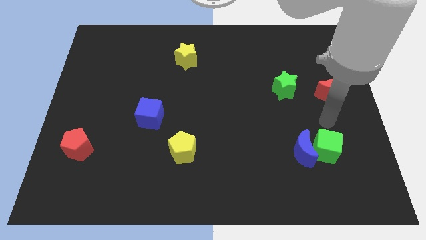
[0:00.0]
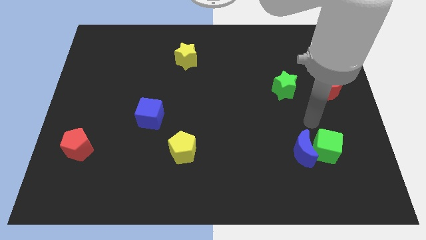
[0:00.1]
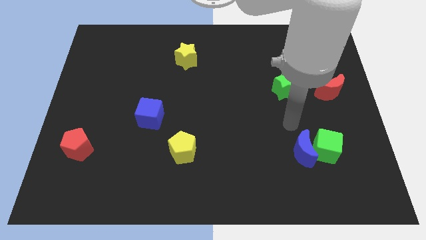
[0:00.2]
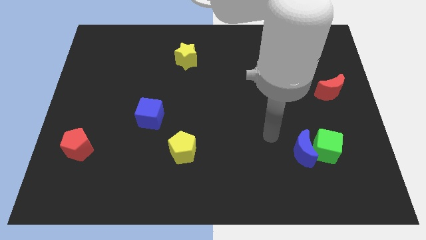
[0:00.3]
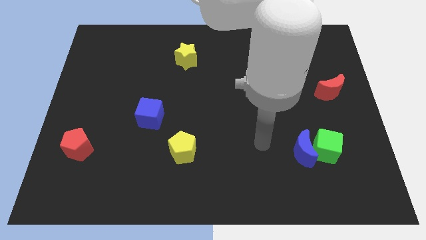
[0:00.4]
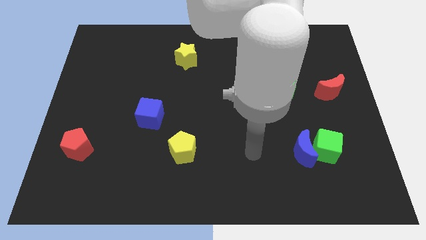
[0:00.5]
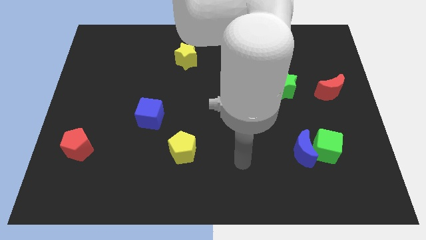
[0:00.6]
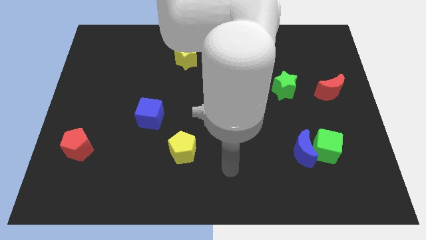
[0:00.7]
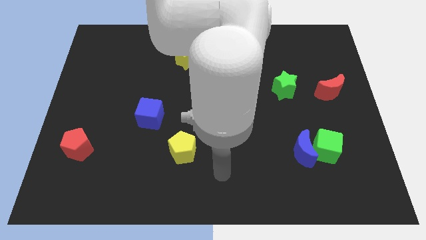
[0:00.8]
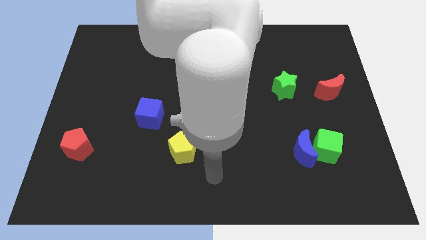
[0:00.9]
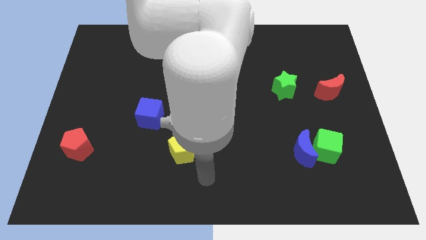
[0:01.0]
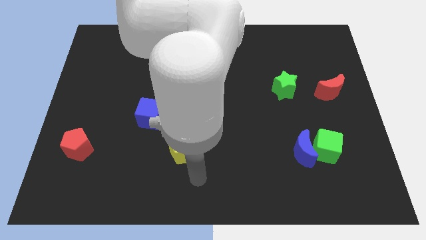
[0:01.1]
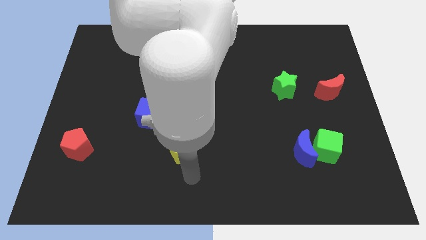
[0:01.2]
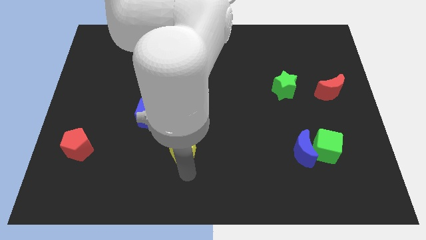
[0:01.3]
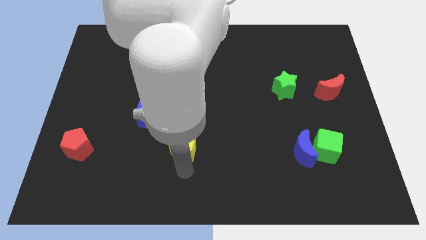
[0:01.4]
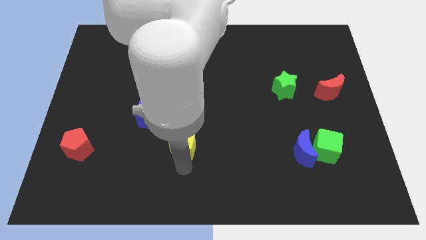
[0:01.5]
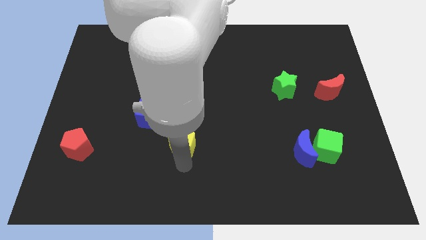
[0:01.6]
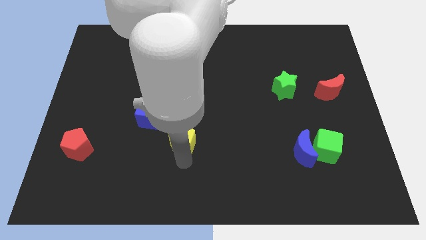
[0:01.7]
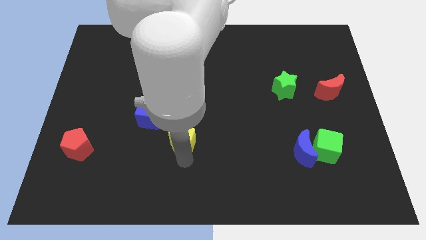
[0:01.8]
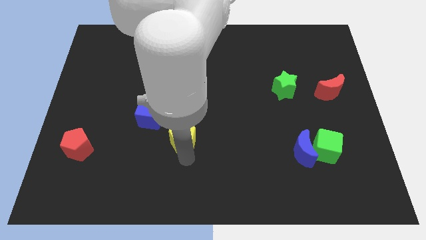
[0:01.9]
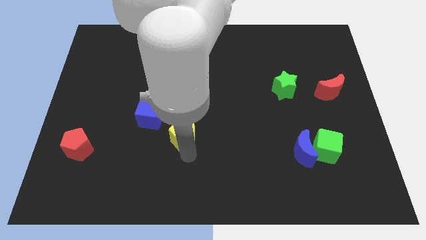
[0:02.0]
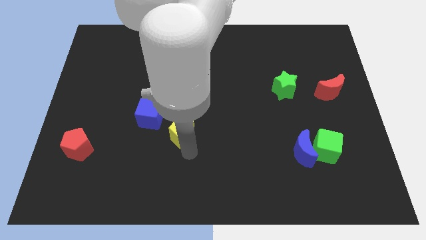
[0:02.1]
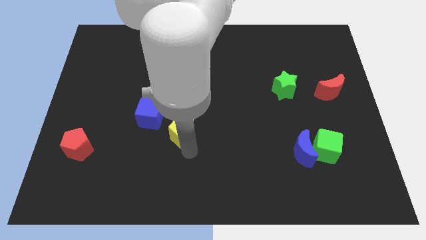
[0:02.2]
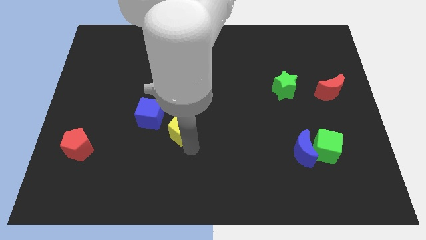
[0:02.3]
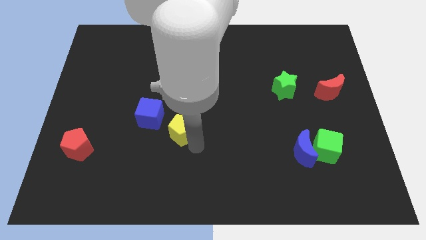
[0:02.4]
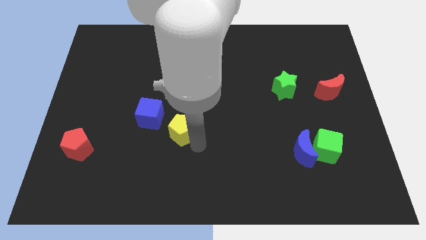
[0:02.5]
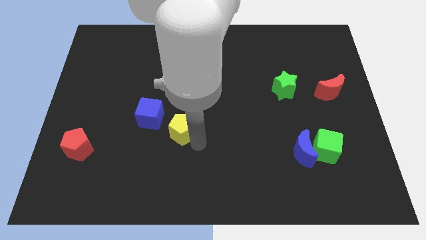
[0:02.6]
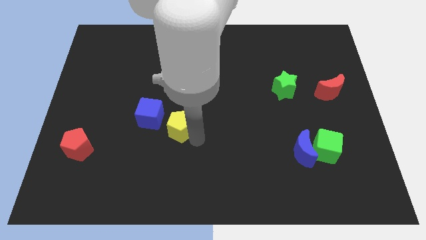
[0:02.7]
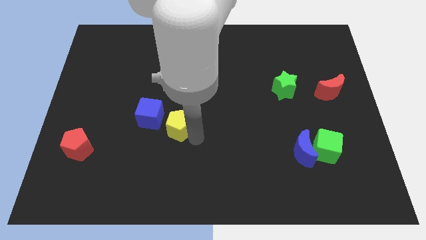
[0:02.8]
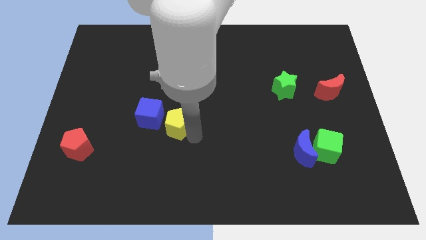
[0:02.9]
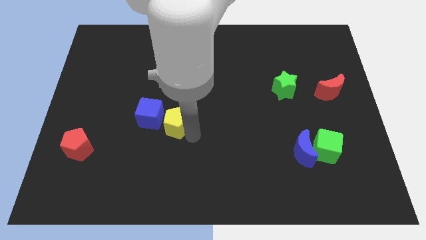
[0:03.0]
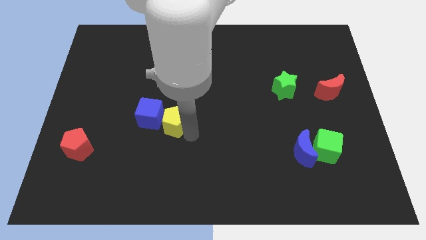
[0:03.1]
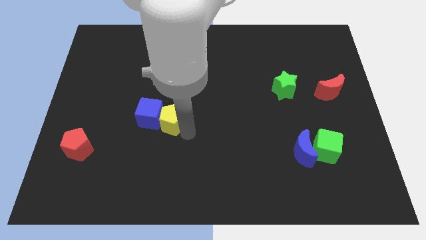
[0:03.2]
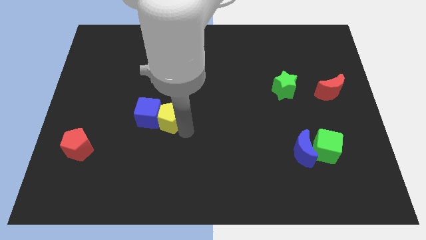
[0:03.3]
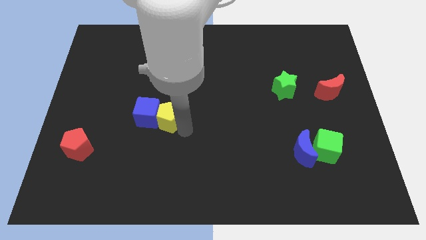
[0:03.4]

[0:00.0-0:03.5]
move the yellow pentagon to the blue cube

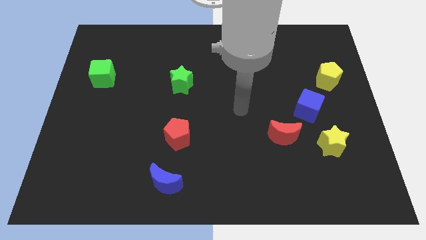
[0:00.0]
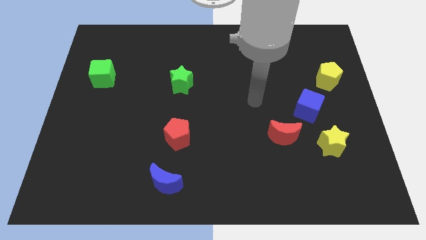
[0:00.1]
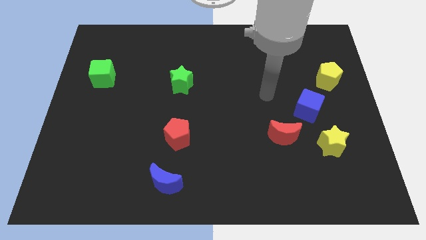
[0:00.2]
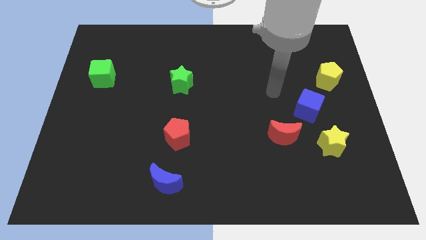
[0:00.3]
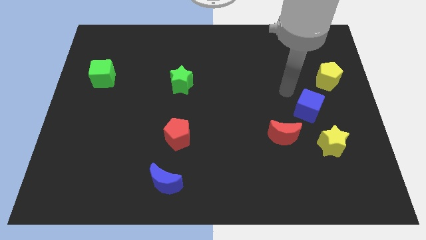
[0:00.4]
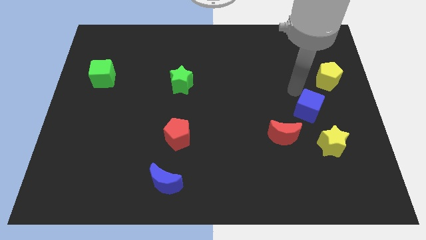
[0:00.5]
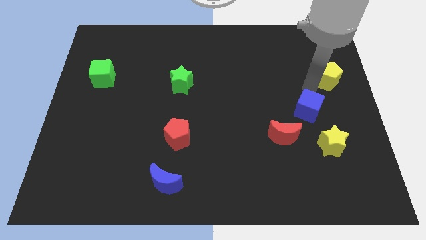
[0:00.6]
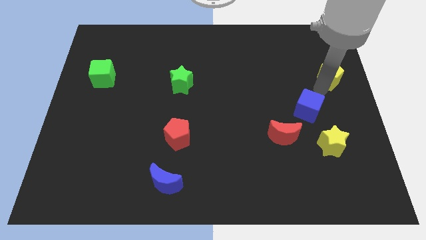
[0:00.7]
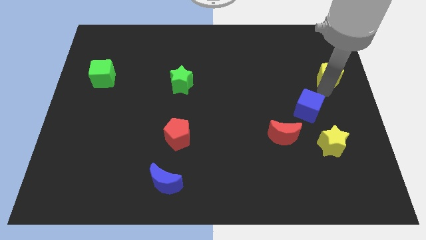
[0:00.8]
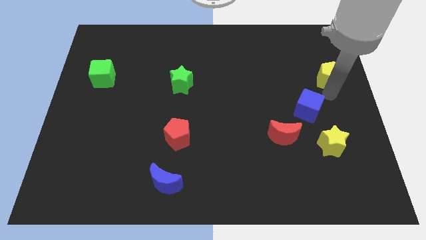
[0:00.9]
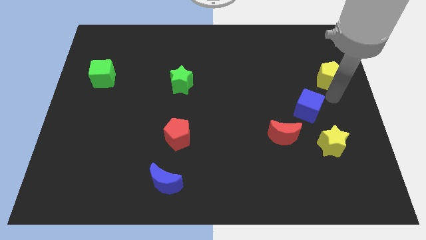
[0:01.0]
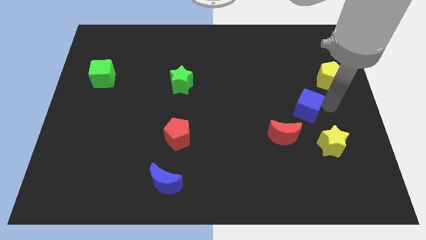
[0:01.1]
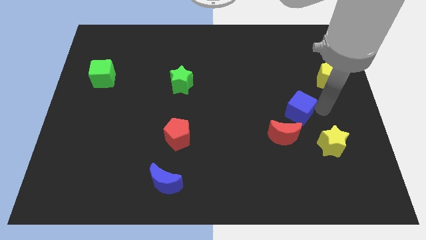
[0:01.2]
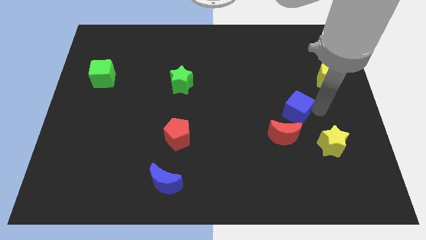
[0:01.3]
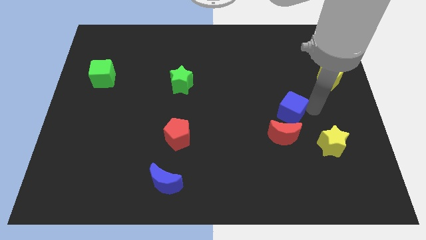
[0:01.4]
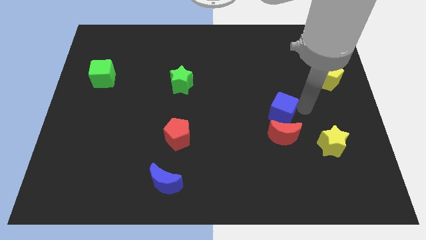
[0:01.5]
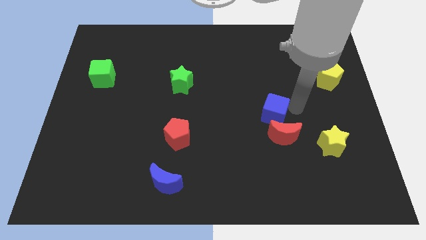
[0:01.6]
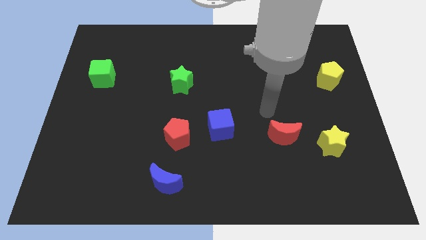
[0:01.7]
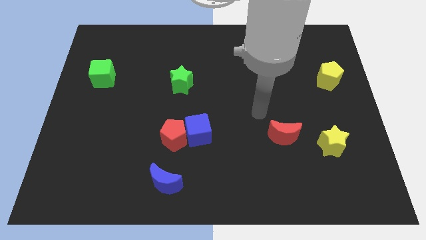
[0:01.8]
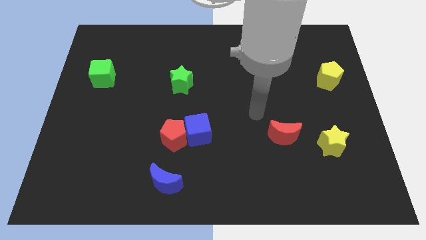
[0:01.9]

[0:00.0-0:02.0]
slide the blue cube close to the red pentagon

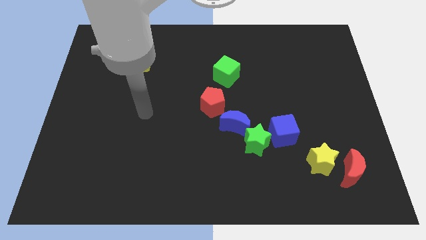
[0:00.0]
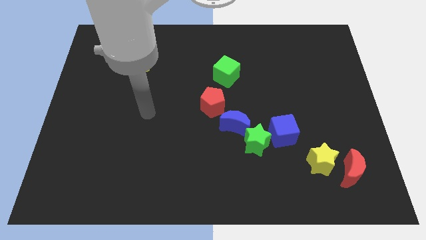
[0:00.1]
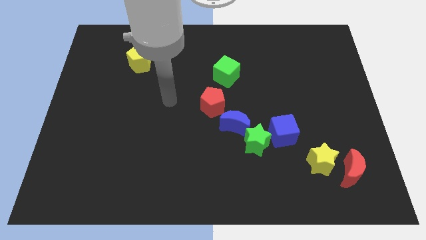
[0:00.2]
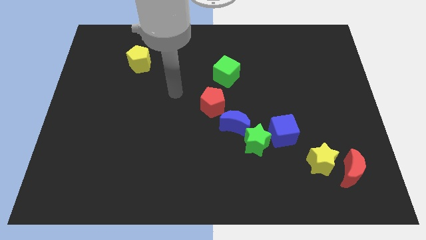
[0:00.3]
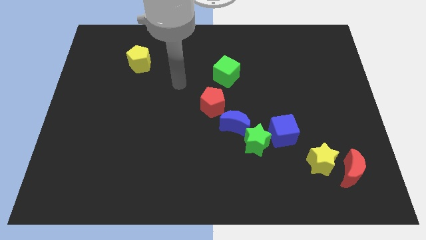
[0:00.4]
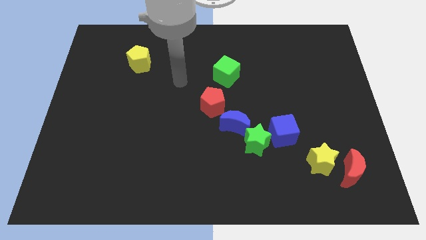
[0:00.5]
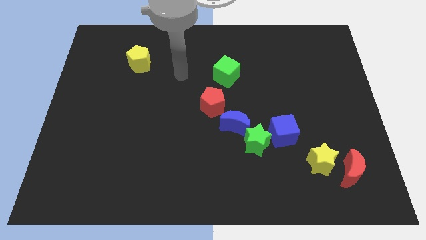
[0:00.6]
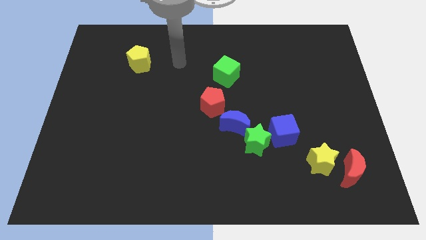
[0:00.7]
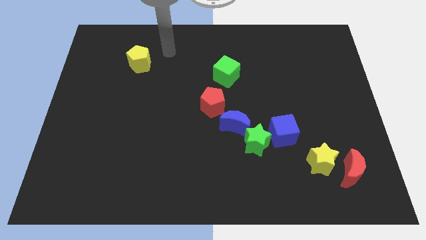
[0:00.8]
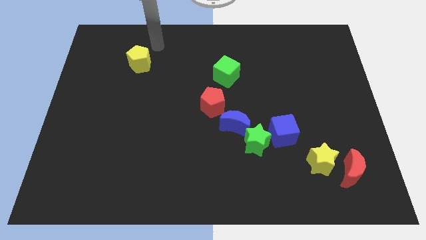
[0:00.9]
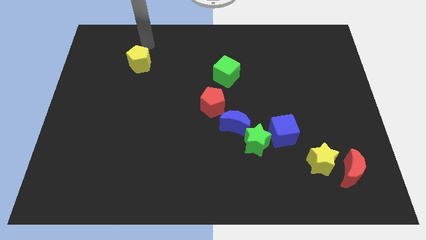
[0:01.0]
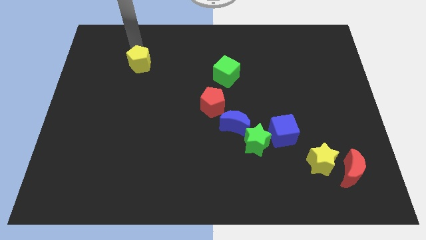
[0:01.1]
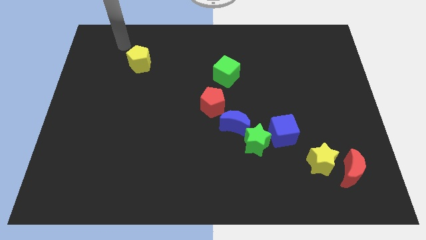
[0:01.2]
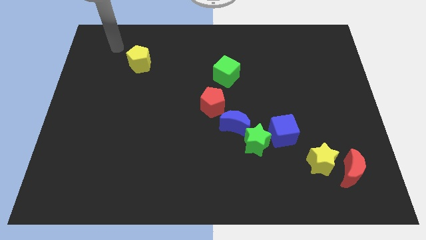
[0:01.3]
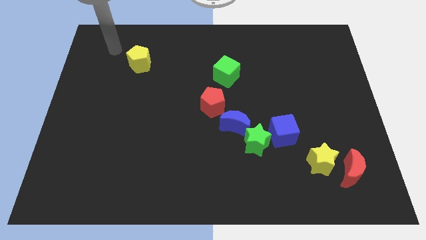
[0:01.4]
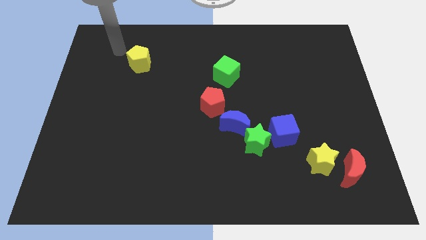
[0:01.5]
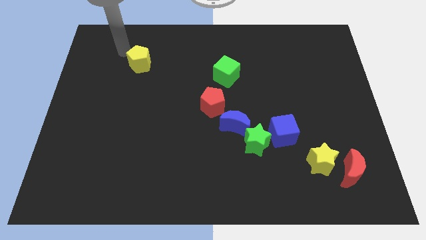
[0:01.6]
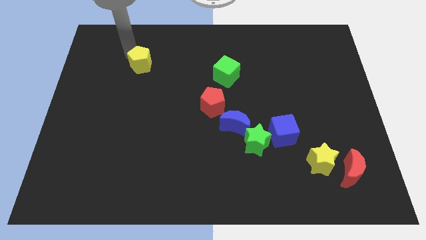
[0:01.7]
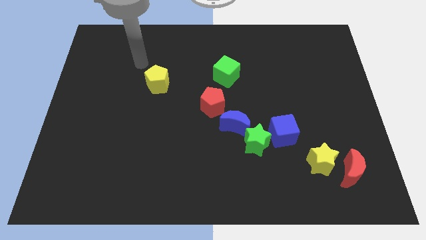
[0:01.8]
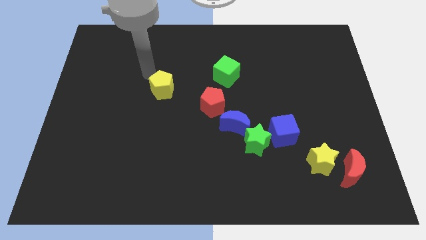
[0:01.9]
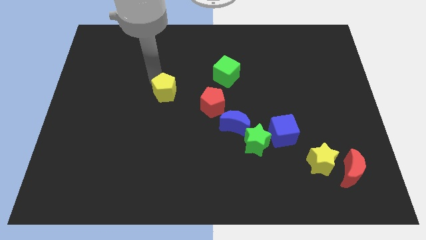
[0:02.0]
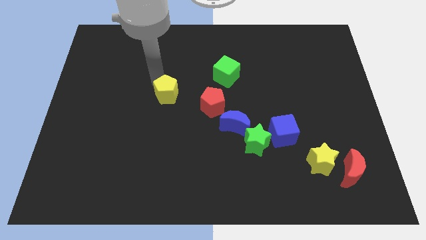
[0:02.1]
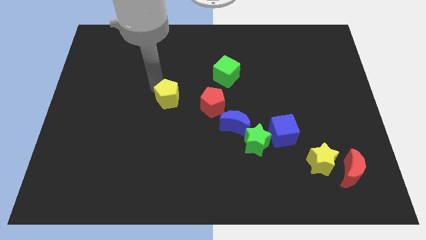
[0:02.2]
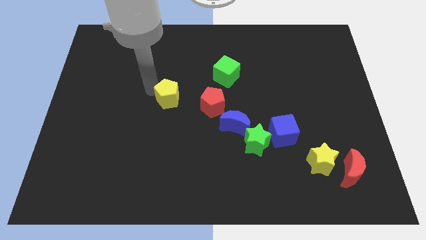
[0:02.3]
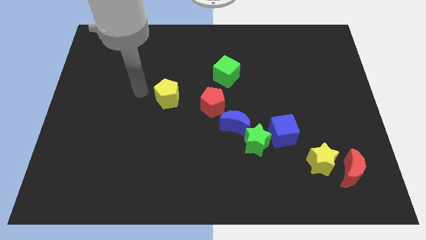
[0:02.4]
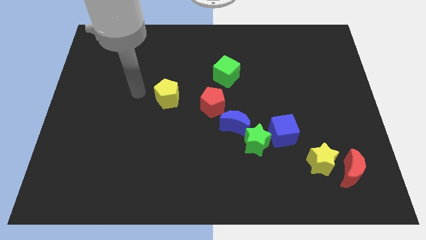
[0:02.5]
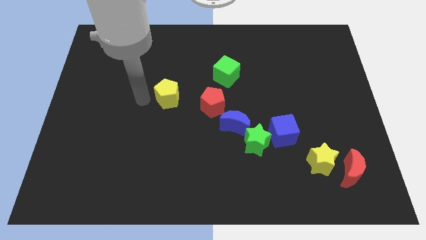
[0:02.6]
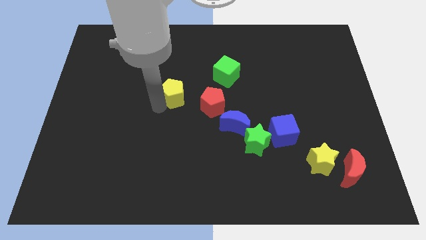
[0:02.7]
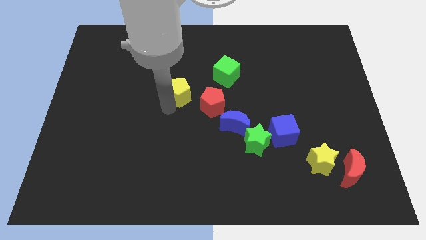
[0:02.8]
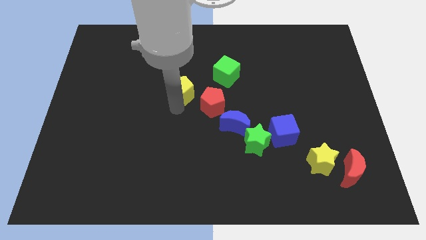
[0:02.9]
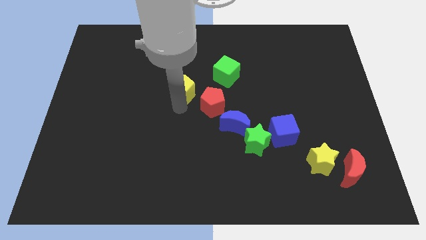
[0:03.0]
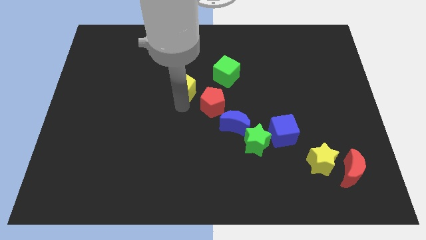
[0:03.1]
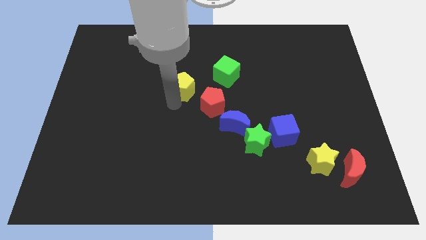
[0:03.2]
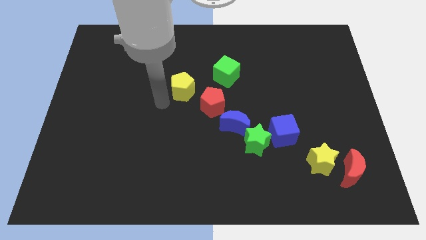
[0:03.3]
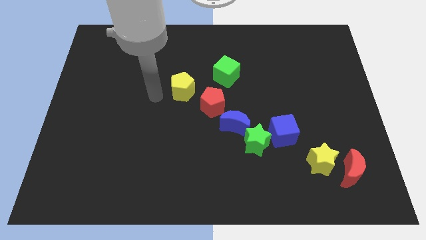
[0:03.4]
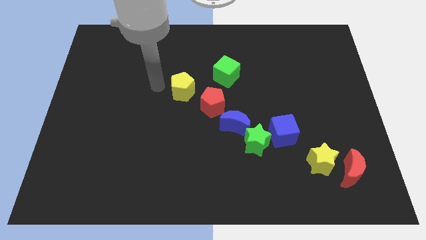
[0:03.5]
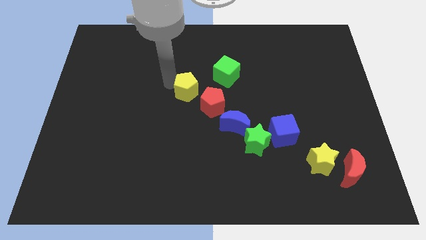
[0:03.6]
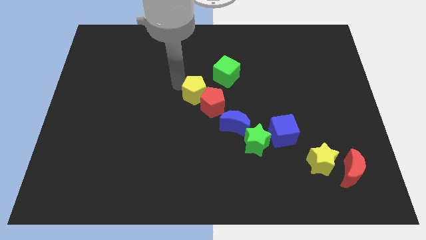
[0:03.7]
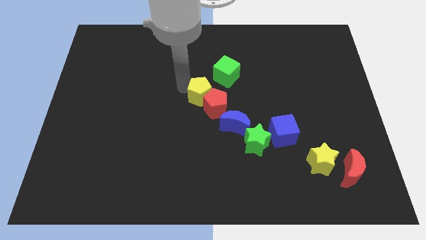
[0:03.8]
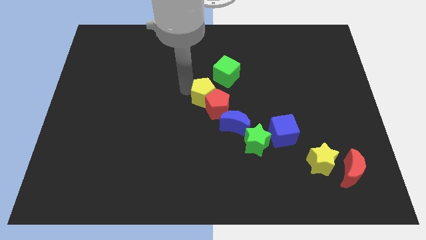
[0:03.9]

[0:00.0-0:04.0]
put the yellow pentagon next to the red pentagon
